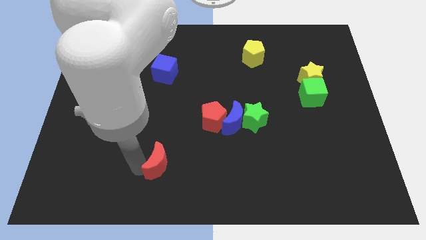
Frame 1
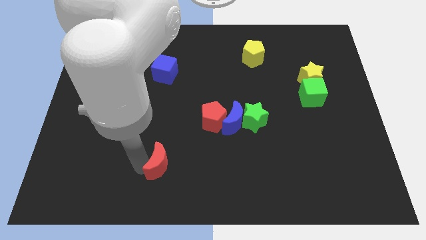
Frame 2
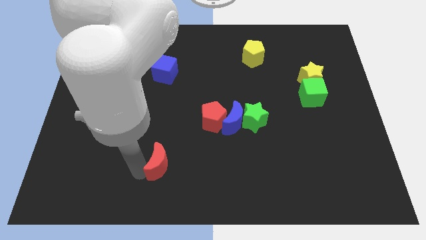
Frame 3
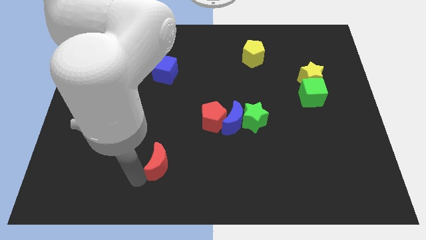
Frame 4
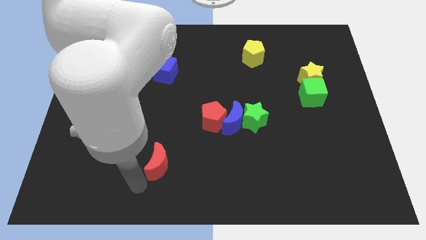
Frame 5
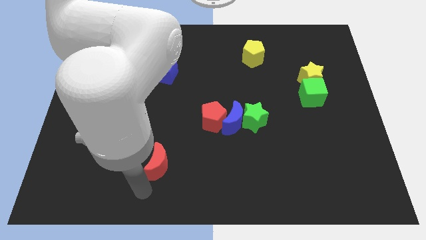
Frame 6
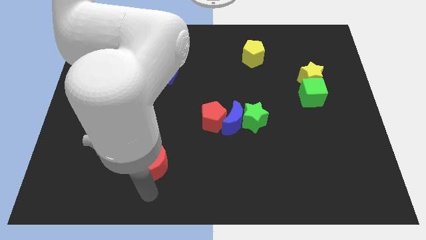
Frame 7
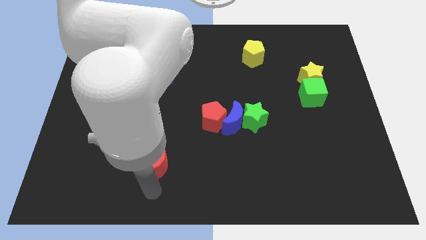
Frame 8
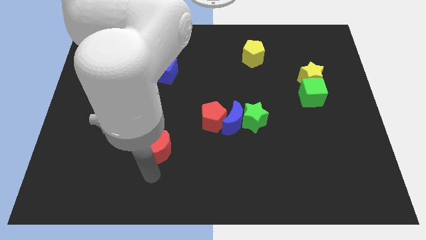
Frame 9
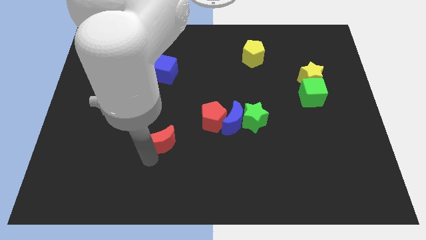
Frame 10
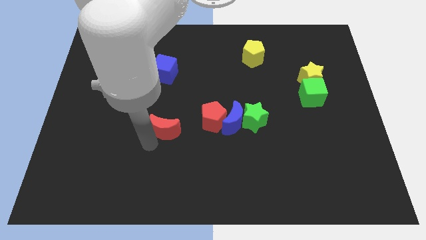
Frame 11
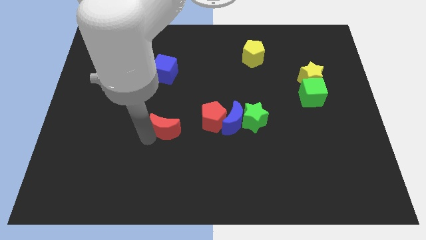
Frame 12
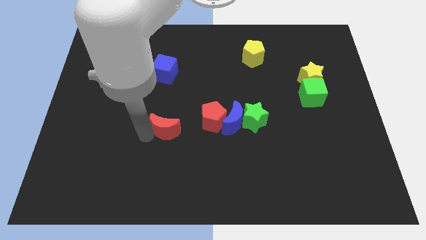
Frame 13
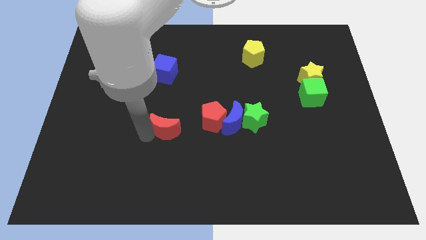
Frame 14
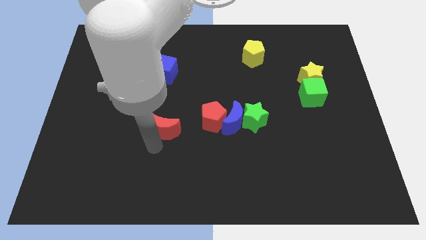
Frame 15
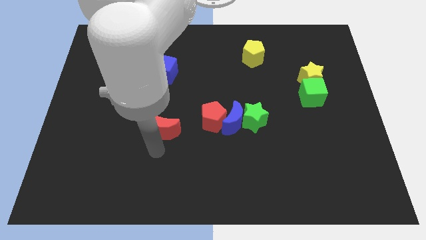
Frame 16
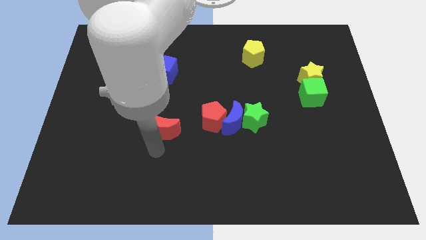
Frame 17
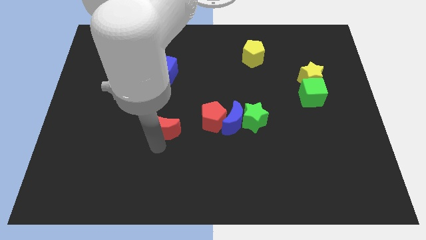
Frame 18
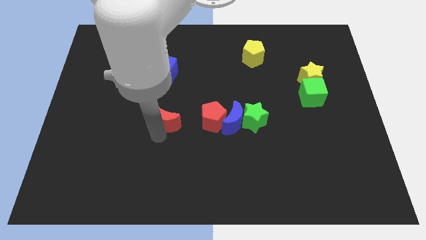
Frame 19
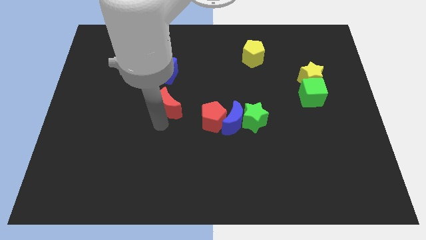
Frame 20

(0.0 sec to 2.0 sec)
move the red cresent to the left of the red pentagon

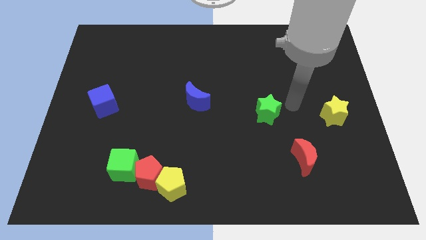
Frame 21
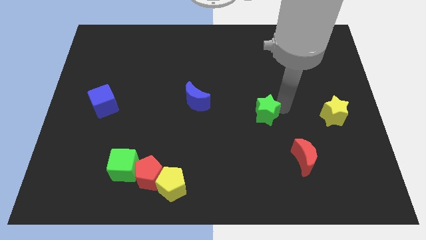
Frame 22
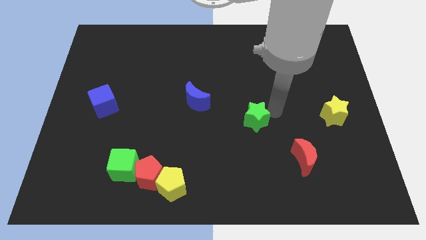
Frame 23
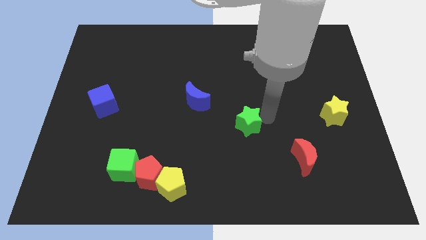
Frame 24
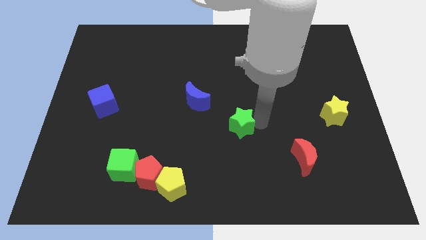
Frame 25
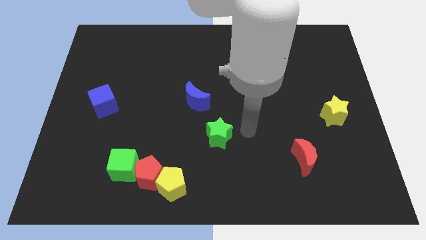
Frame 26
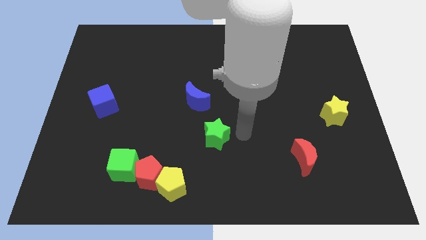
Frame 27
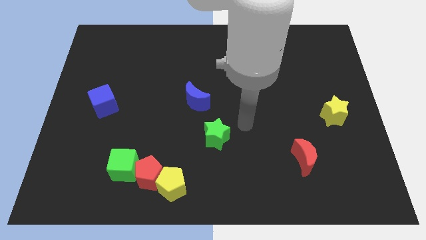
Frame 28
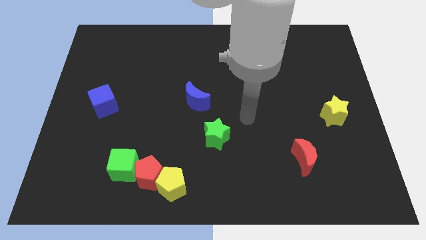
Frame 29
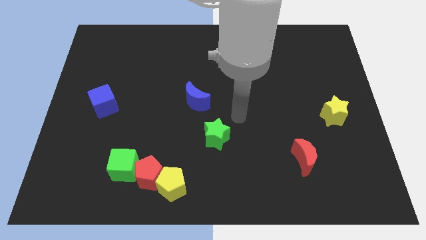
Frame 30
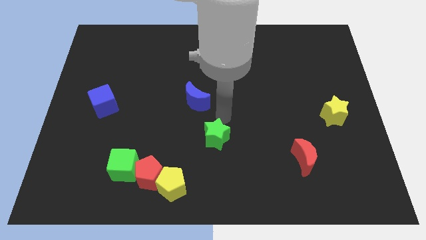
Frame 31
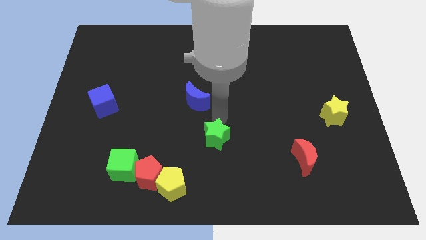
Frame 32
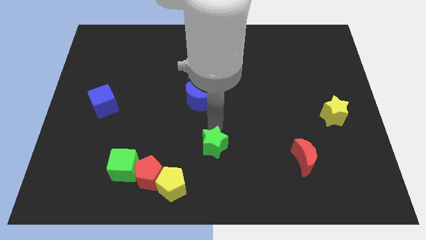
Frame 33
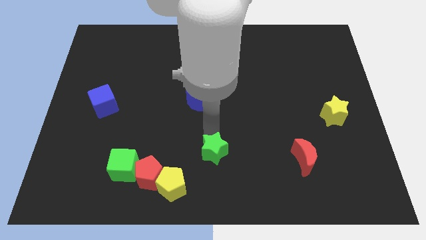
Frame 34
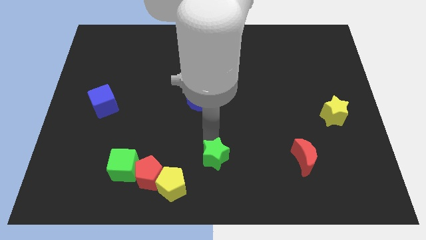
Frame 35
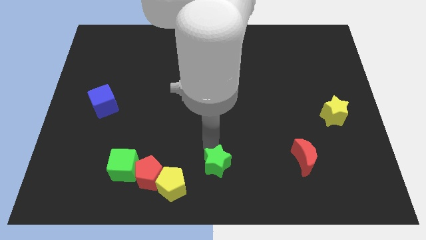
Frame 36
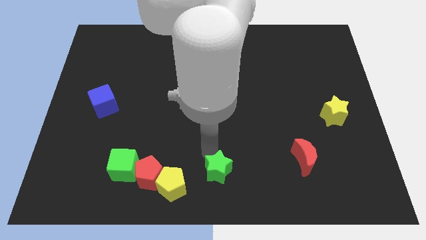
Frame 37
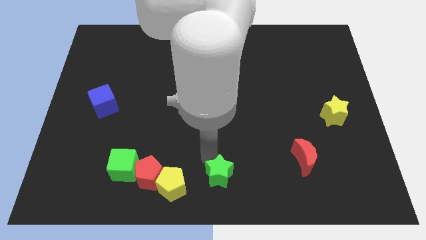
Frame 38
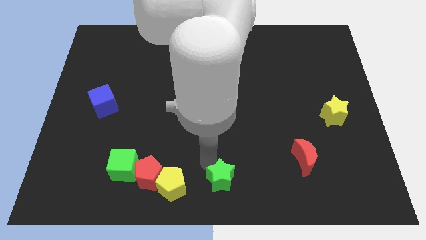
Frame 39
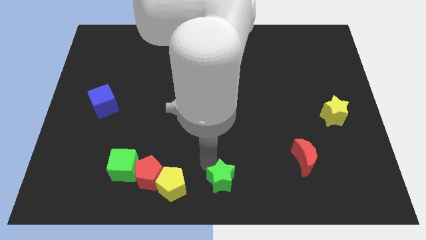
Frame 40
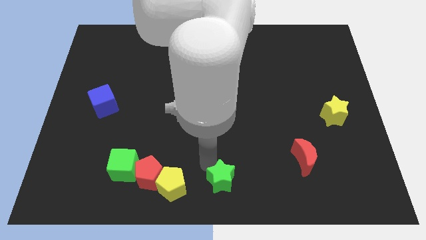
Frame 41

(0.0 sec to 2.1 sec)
place the green star horizontally to the right side of the yellow pentagon

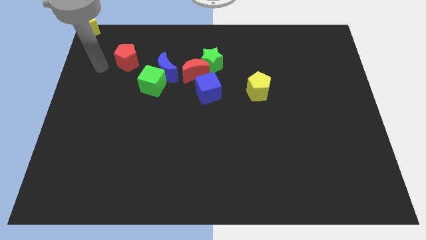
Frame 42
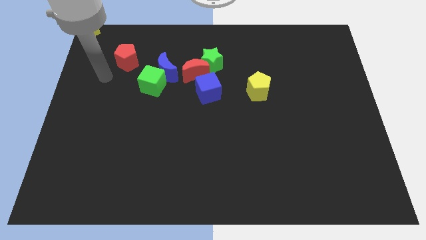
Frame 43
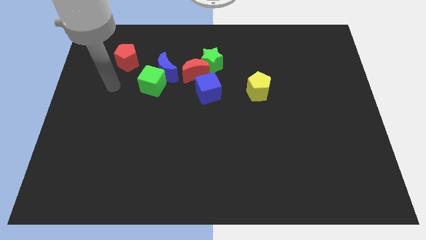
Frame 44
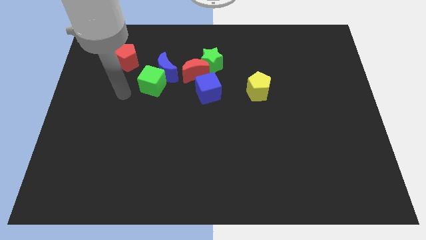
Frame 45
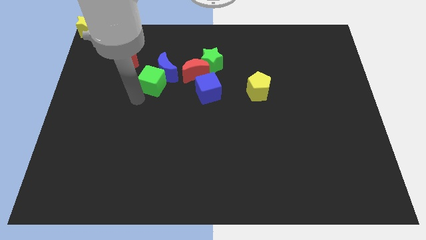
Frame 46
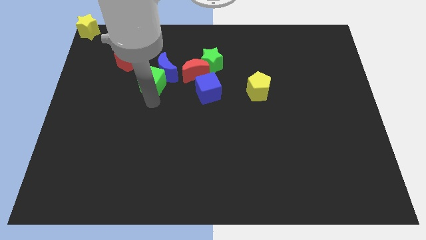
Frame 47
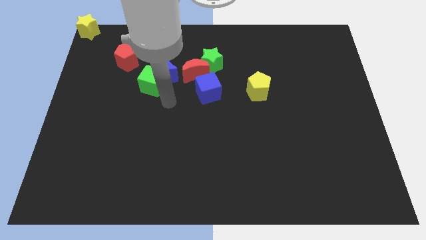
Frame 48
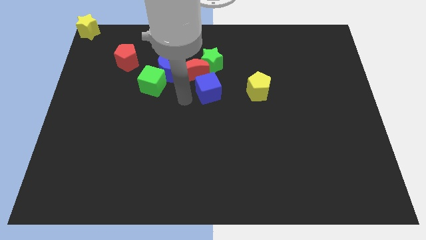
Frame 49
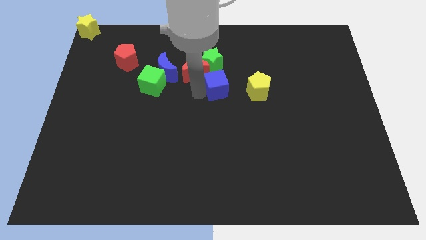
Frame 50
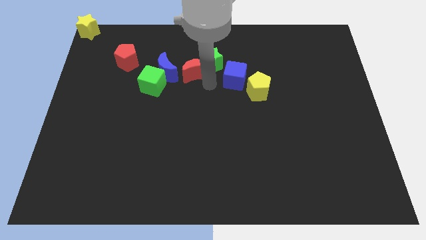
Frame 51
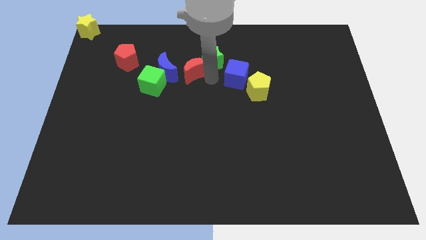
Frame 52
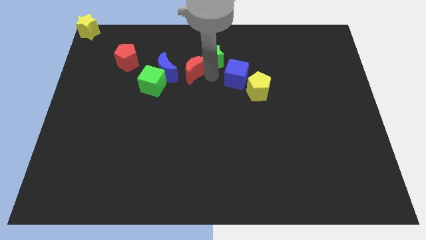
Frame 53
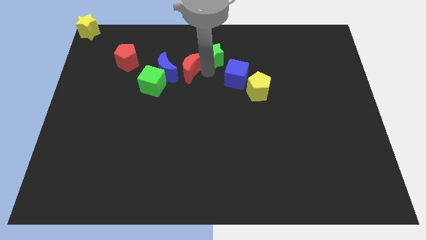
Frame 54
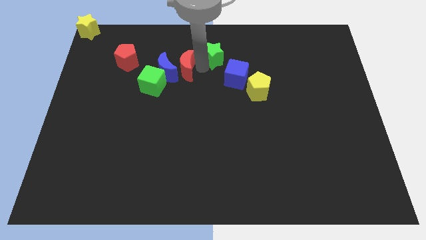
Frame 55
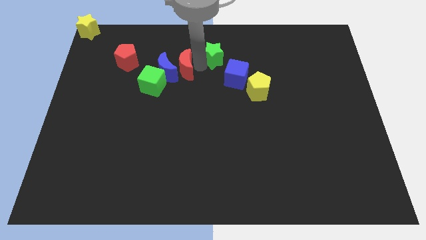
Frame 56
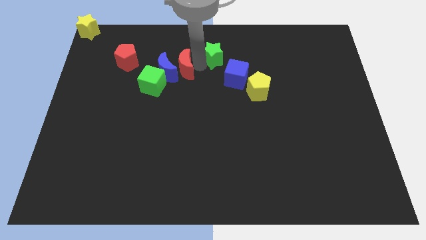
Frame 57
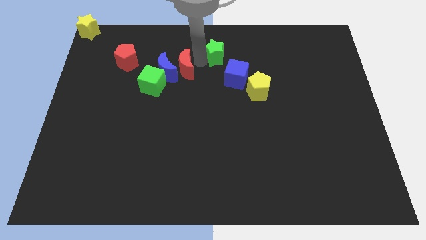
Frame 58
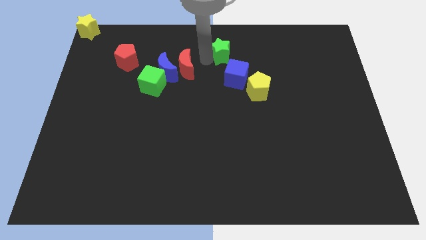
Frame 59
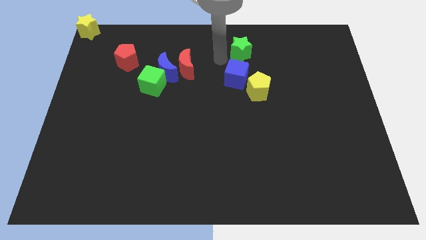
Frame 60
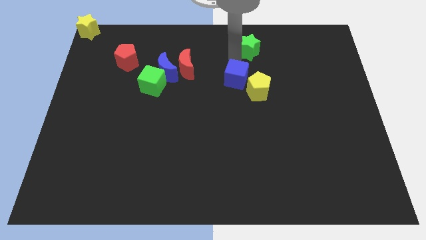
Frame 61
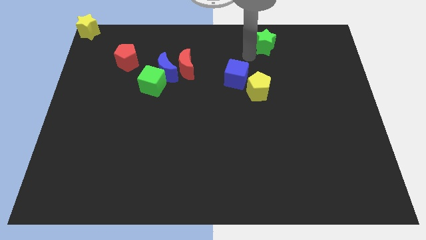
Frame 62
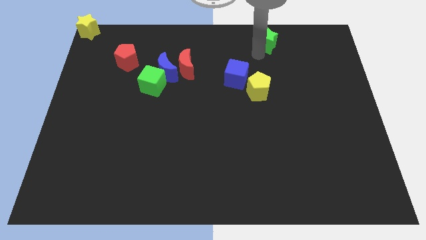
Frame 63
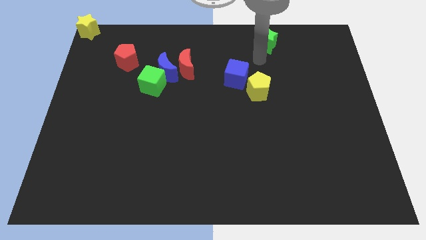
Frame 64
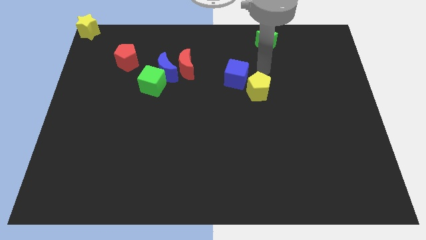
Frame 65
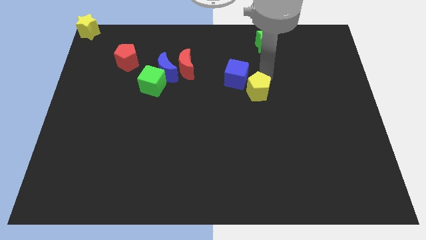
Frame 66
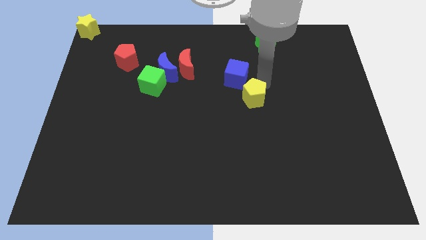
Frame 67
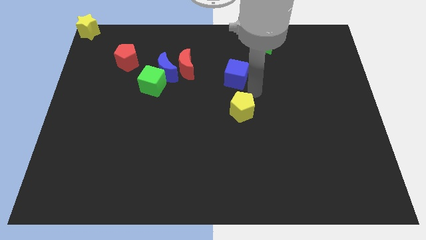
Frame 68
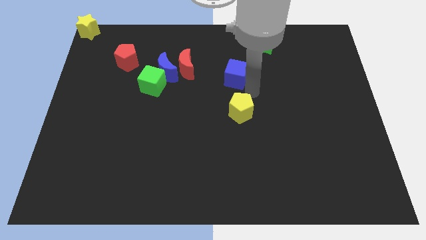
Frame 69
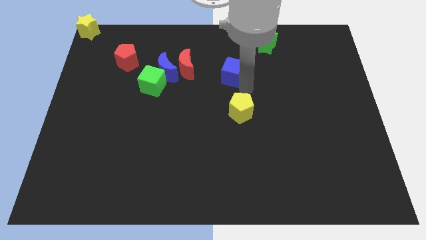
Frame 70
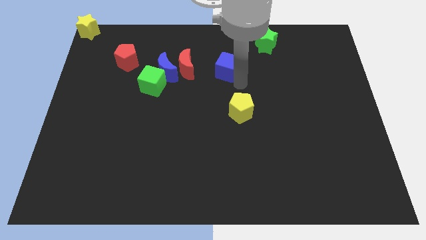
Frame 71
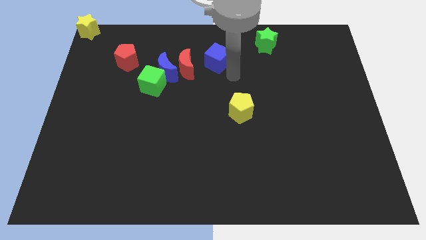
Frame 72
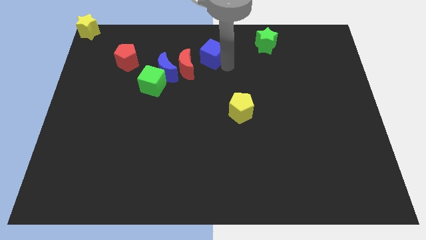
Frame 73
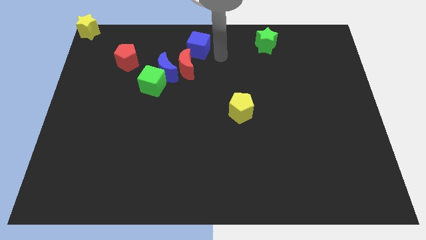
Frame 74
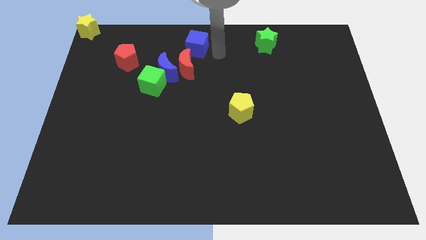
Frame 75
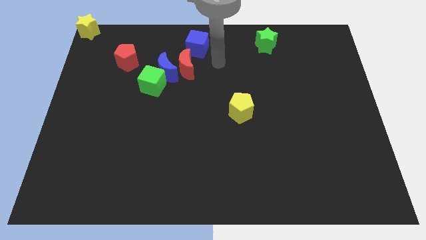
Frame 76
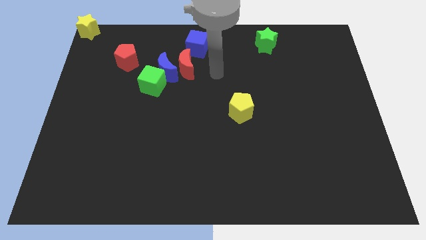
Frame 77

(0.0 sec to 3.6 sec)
drag green star towards right side of the board

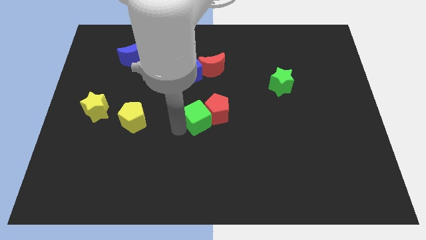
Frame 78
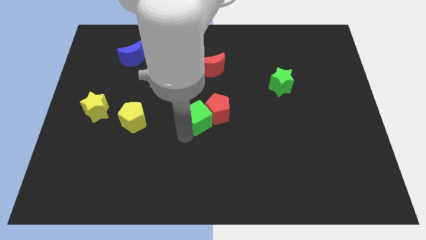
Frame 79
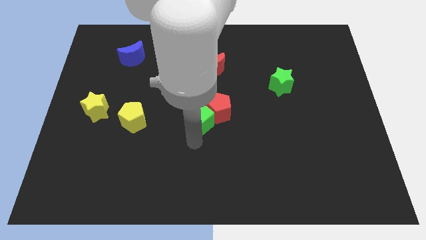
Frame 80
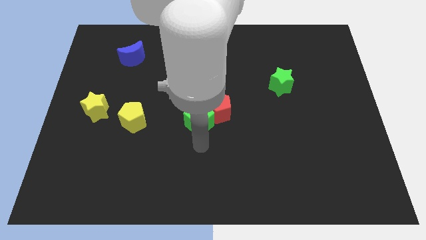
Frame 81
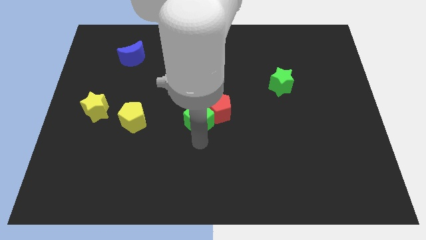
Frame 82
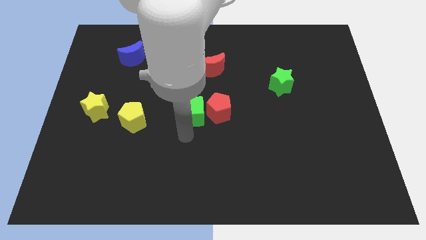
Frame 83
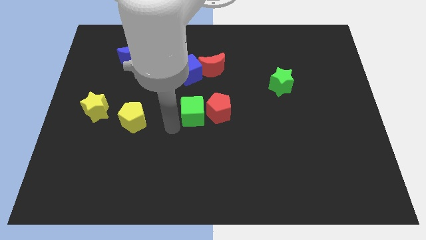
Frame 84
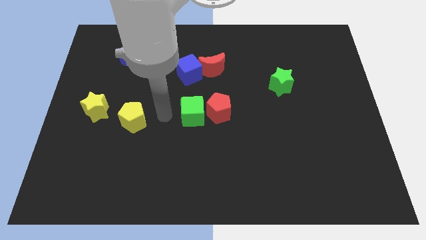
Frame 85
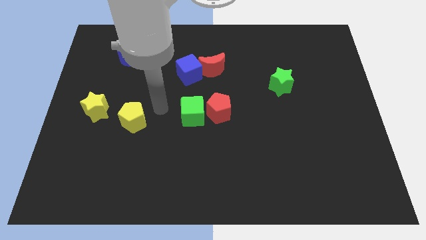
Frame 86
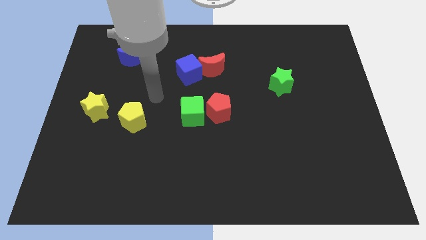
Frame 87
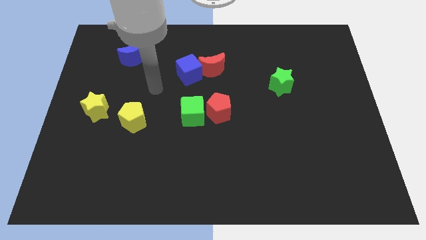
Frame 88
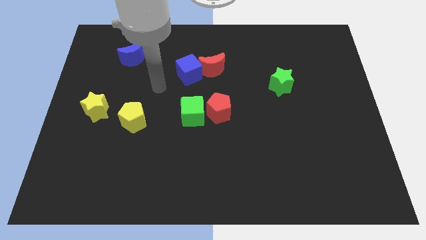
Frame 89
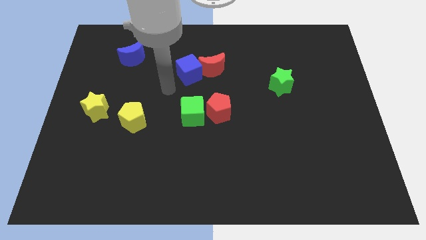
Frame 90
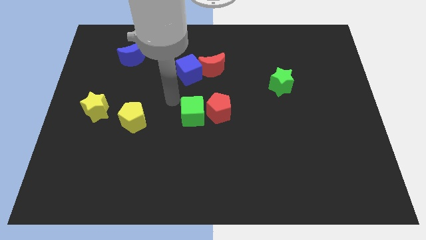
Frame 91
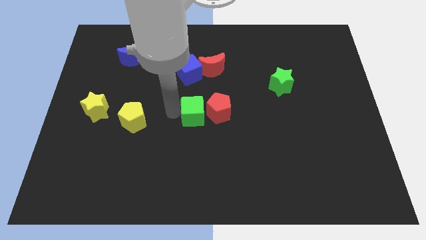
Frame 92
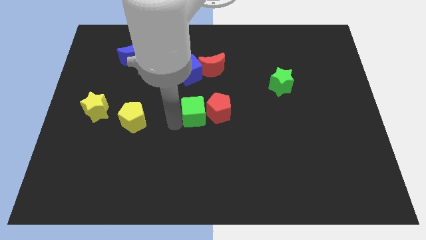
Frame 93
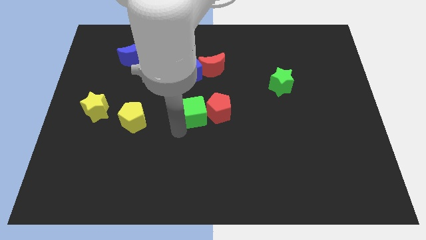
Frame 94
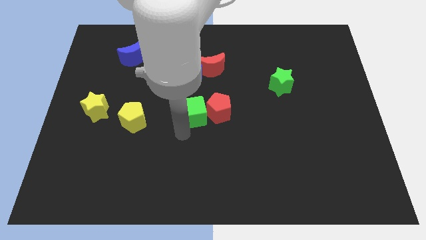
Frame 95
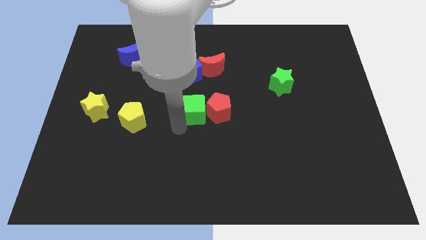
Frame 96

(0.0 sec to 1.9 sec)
slide the green cube towards the center
